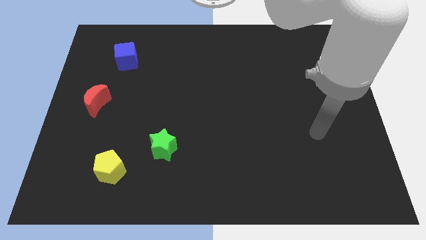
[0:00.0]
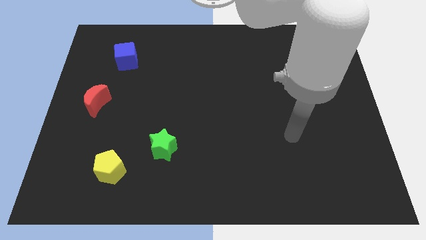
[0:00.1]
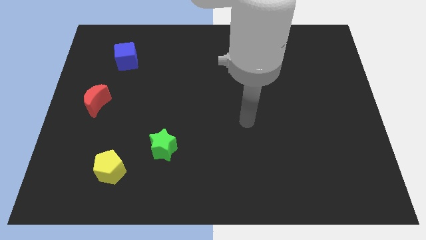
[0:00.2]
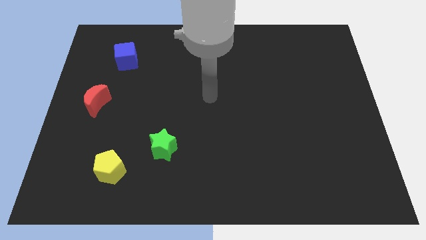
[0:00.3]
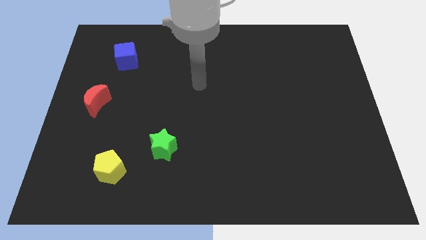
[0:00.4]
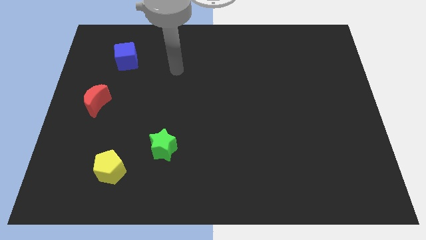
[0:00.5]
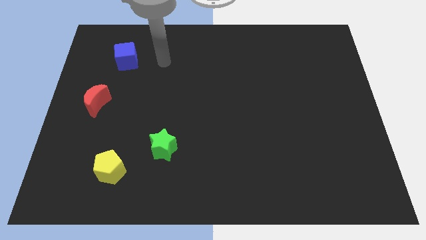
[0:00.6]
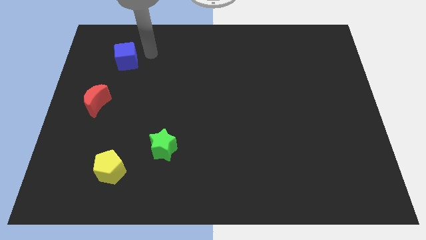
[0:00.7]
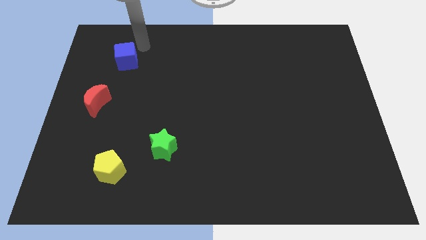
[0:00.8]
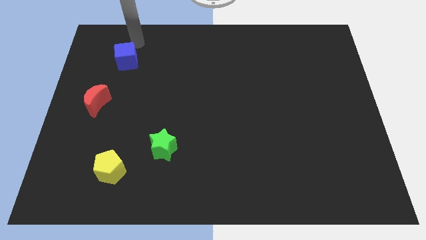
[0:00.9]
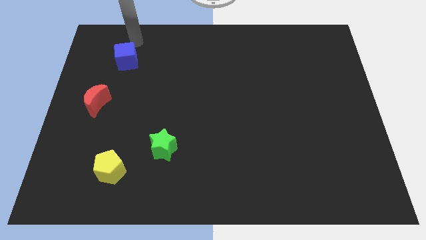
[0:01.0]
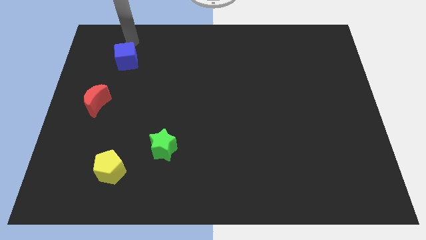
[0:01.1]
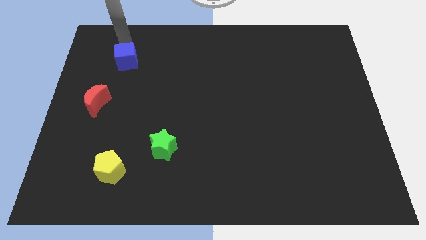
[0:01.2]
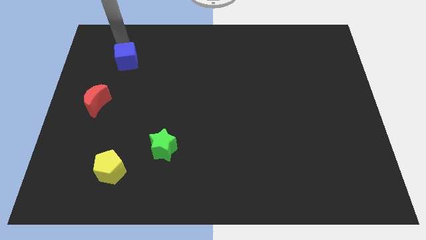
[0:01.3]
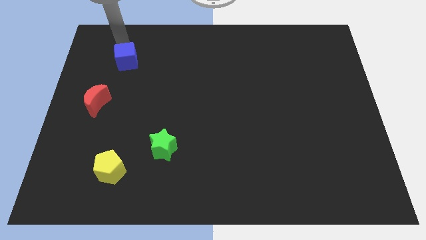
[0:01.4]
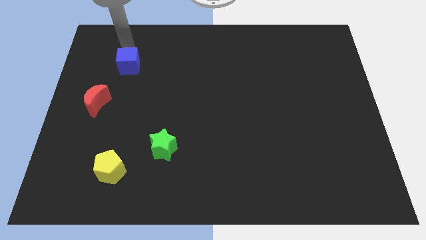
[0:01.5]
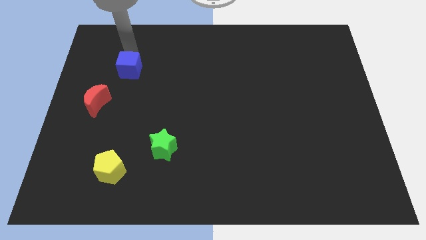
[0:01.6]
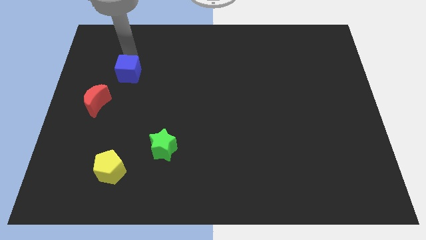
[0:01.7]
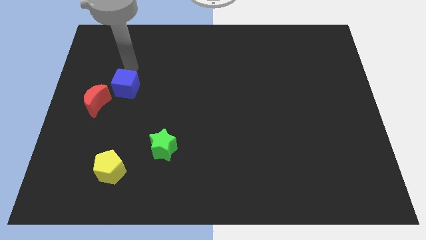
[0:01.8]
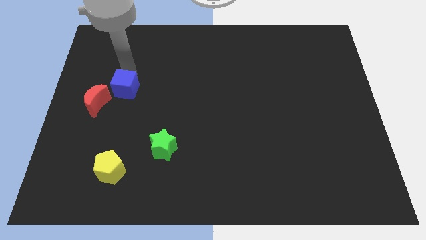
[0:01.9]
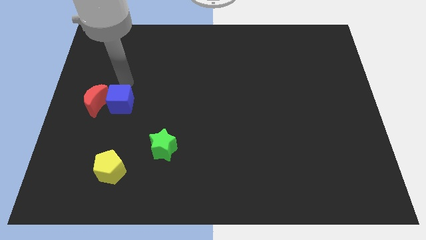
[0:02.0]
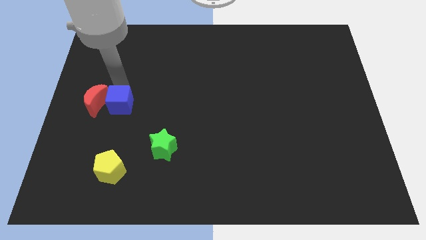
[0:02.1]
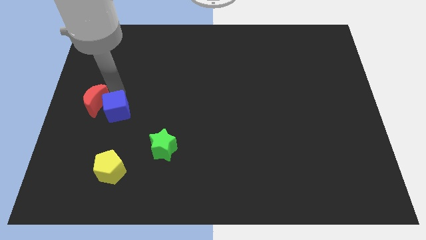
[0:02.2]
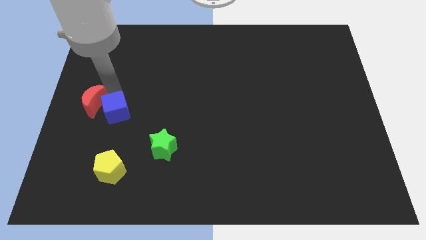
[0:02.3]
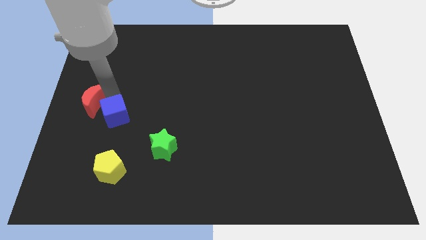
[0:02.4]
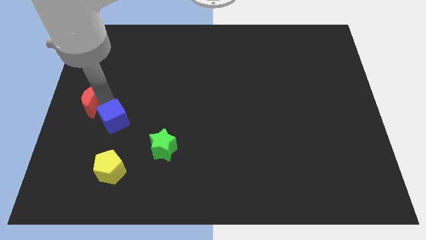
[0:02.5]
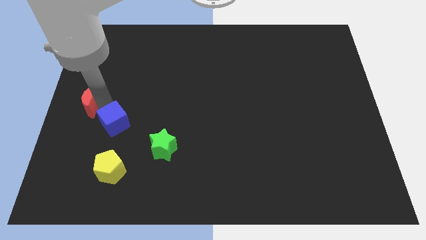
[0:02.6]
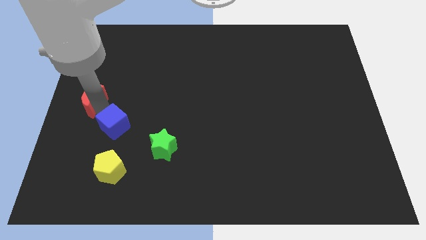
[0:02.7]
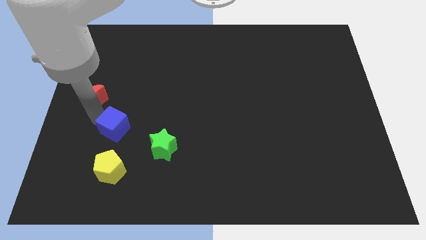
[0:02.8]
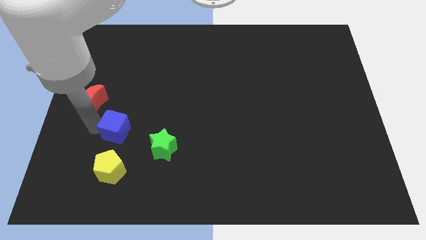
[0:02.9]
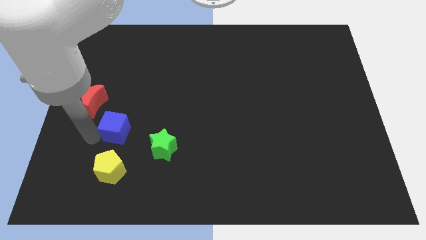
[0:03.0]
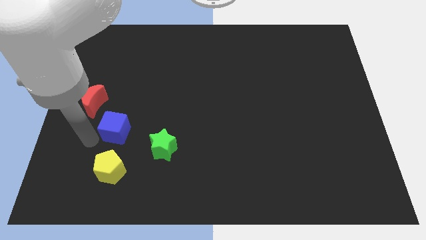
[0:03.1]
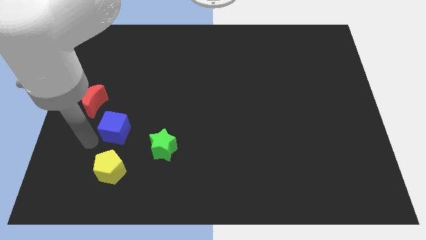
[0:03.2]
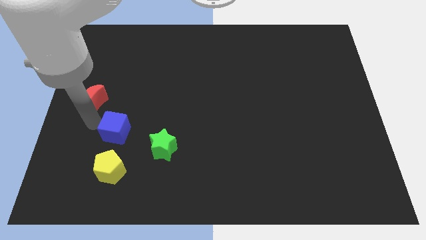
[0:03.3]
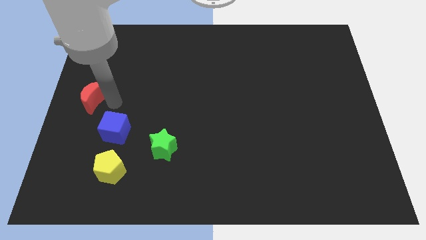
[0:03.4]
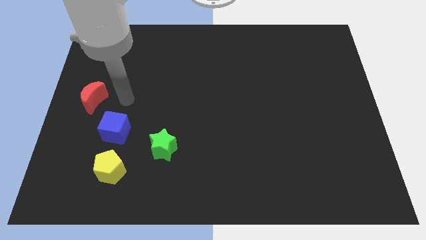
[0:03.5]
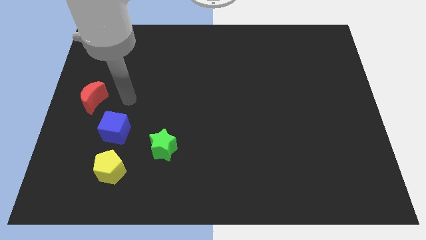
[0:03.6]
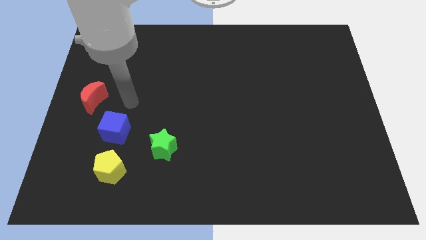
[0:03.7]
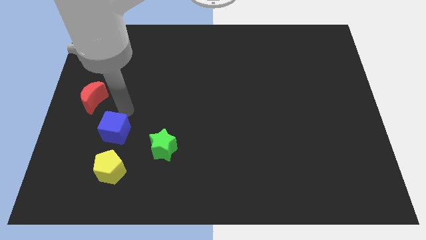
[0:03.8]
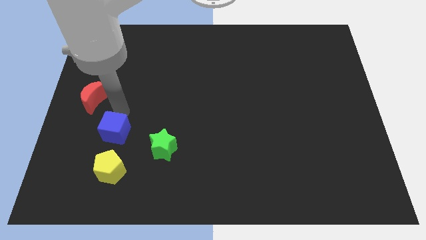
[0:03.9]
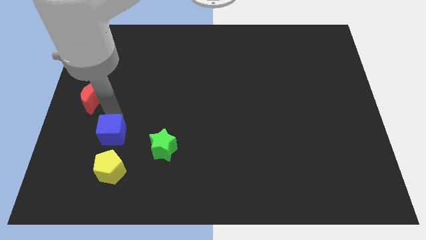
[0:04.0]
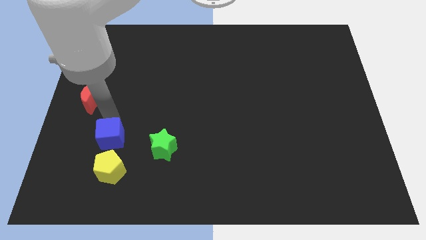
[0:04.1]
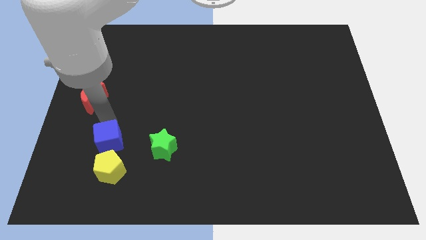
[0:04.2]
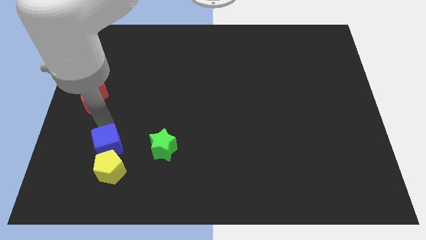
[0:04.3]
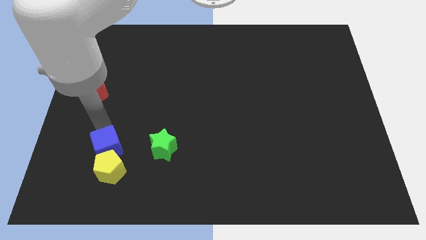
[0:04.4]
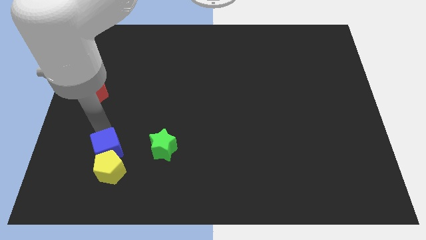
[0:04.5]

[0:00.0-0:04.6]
put the blue cube next to the yellow pentagon

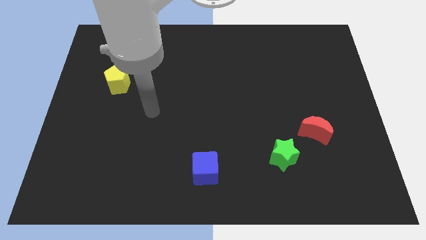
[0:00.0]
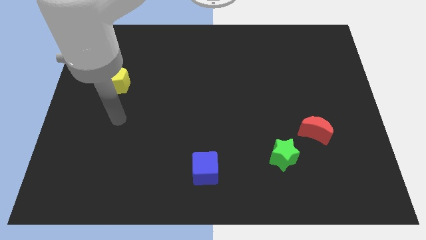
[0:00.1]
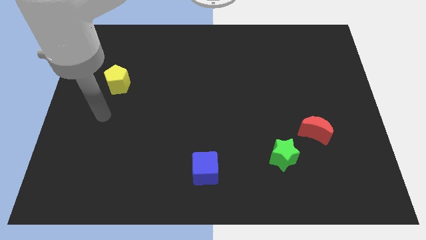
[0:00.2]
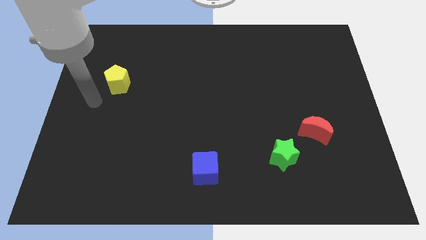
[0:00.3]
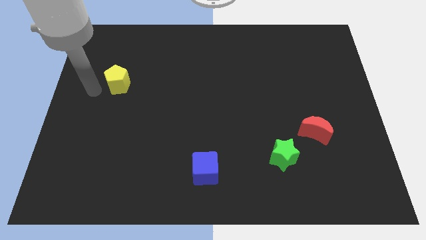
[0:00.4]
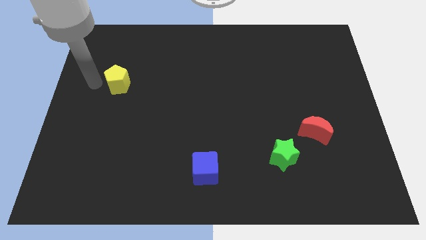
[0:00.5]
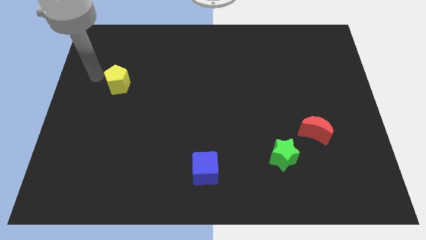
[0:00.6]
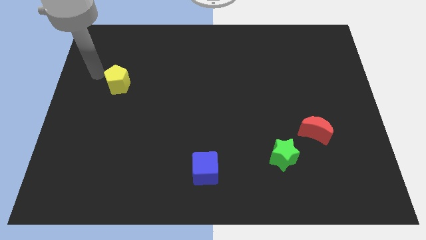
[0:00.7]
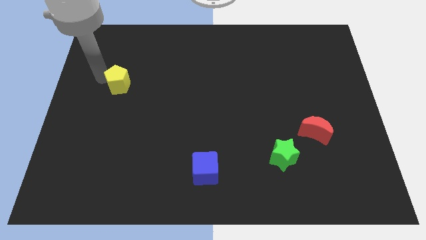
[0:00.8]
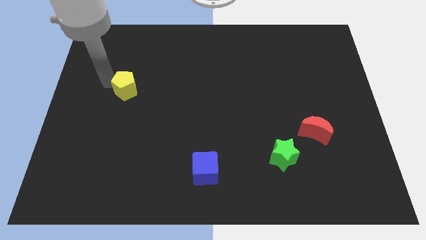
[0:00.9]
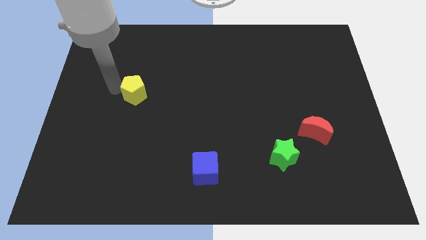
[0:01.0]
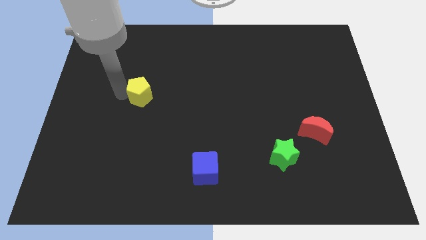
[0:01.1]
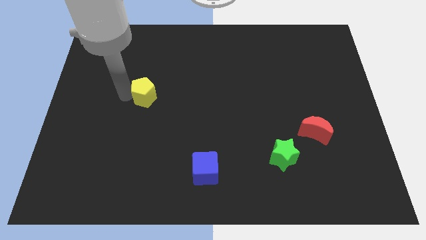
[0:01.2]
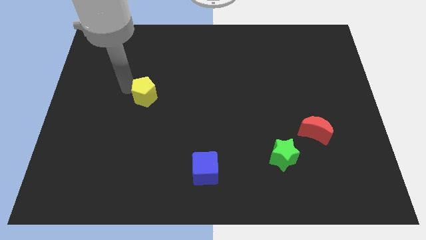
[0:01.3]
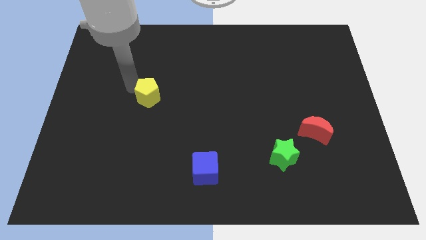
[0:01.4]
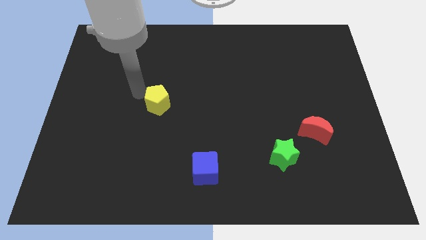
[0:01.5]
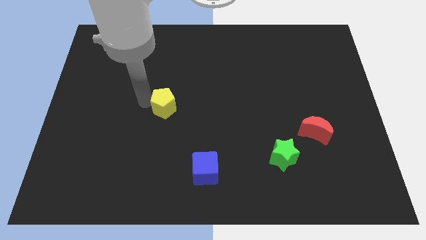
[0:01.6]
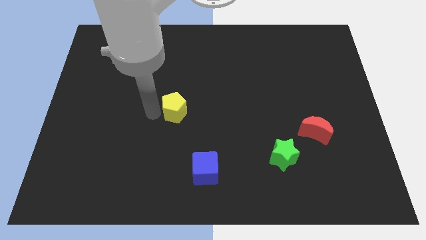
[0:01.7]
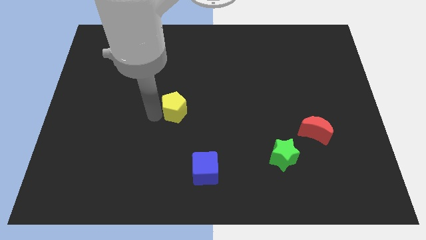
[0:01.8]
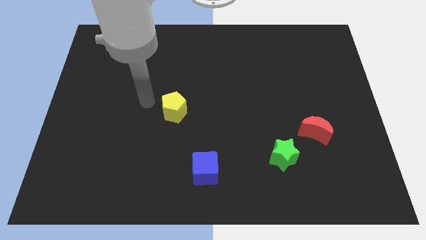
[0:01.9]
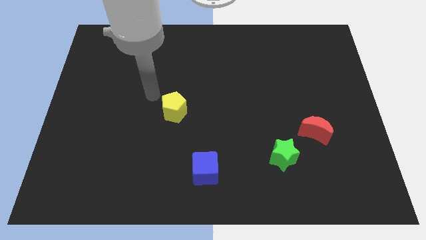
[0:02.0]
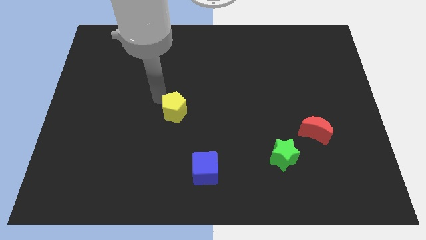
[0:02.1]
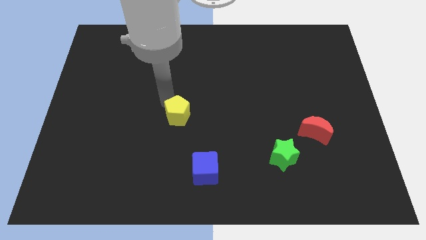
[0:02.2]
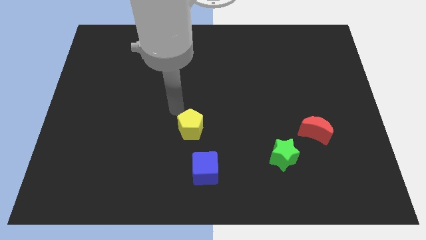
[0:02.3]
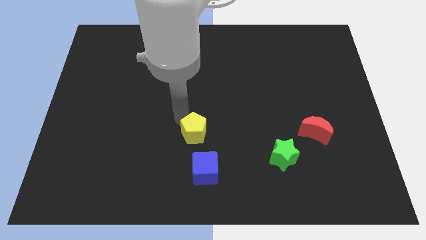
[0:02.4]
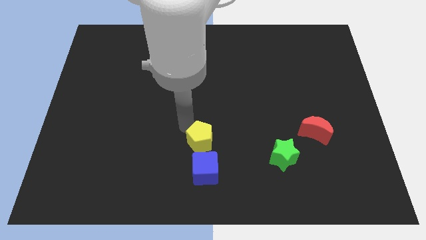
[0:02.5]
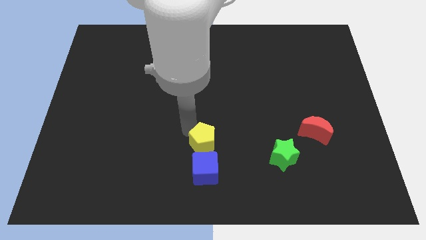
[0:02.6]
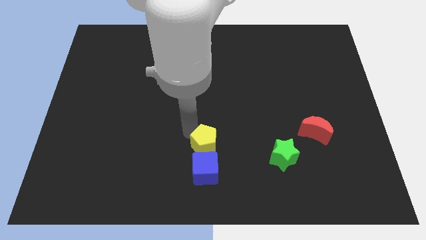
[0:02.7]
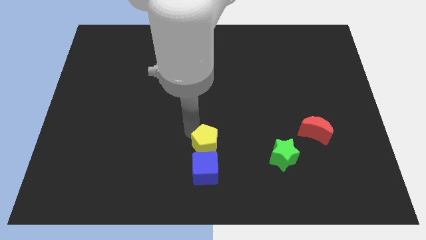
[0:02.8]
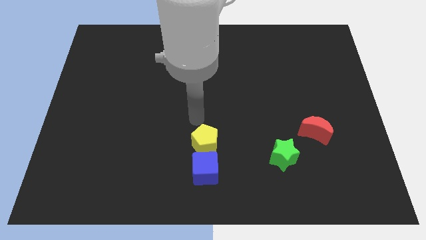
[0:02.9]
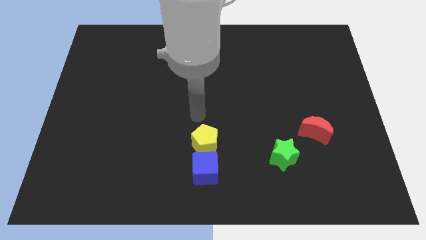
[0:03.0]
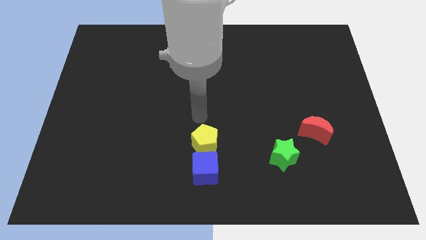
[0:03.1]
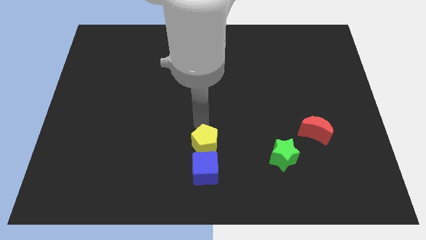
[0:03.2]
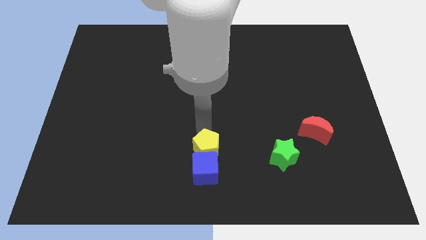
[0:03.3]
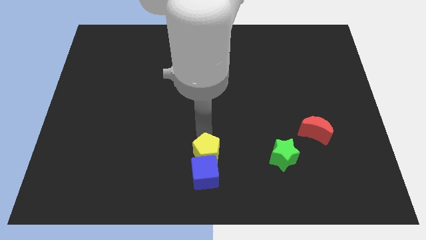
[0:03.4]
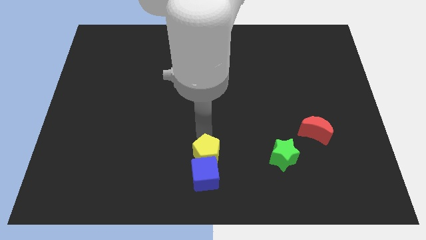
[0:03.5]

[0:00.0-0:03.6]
move the pentagon next to the blue cube

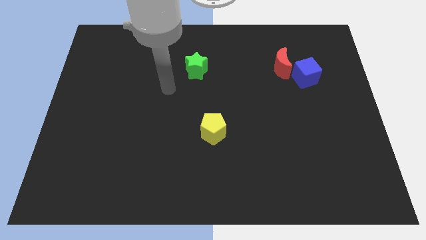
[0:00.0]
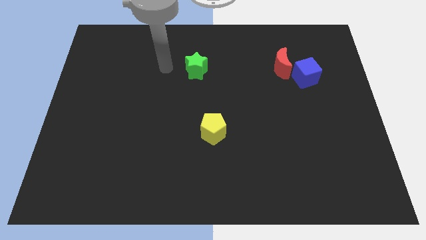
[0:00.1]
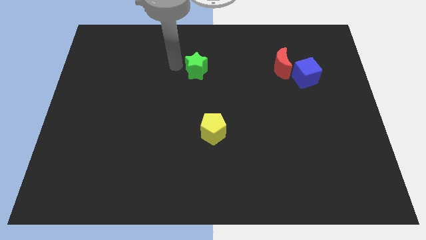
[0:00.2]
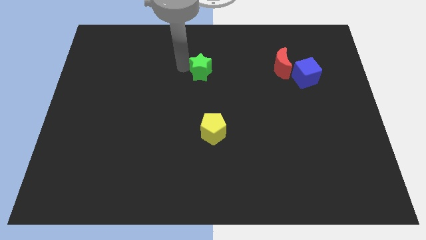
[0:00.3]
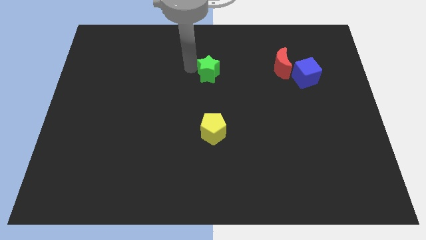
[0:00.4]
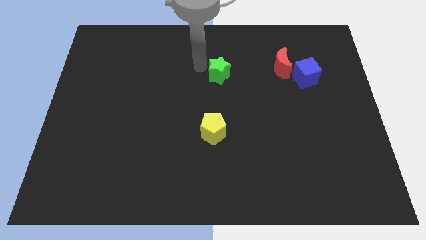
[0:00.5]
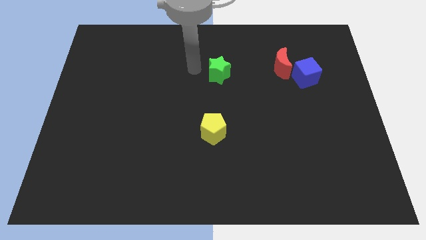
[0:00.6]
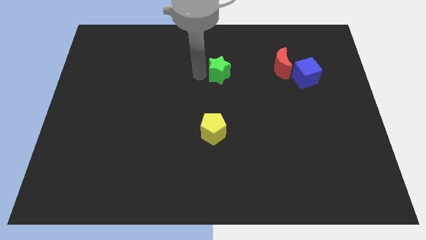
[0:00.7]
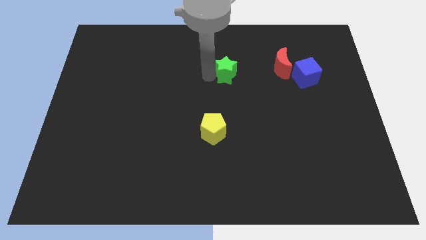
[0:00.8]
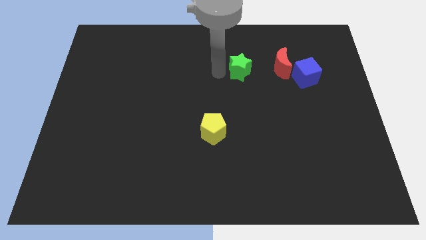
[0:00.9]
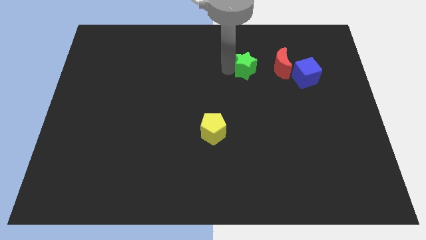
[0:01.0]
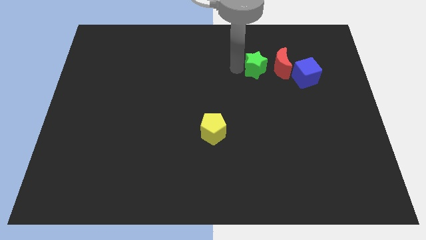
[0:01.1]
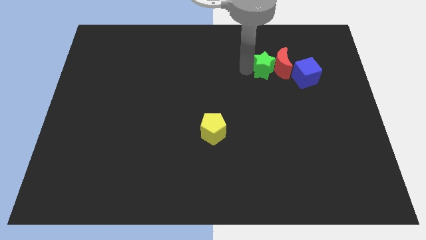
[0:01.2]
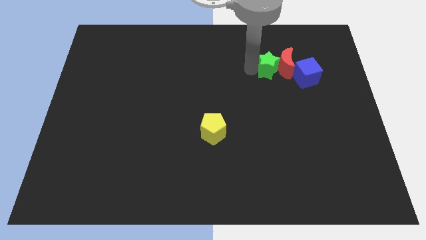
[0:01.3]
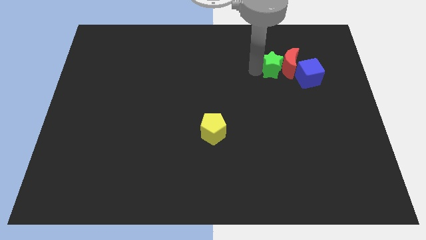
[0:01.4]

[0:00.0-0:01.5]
push the green star close to the red moon
